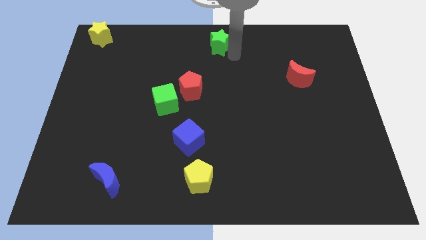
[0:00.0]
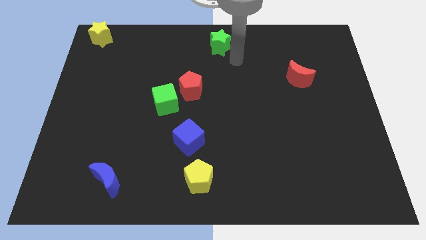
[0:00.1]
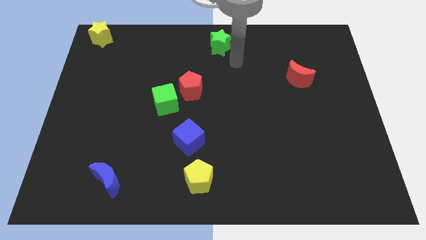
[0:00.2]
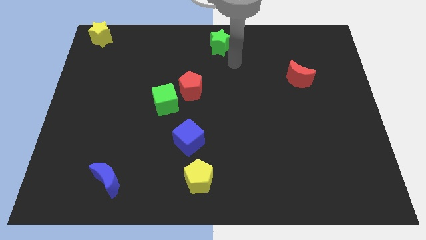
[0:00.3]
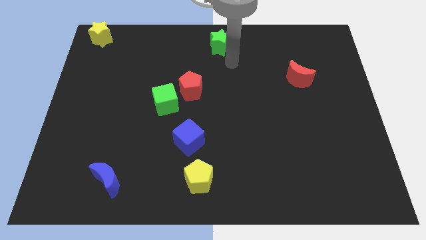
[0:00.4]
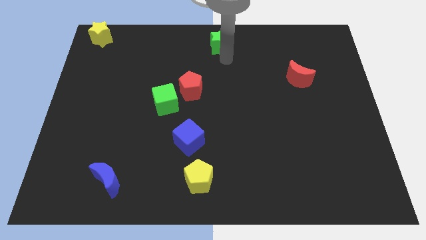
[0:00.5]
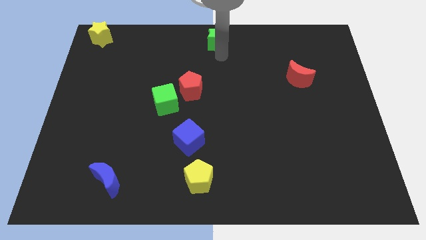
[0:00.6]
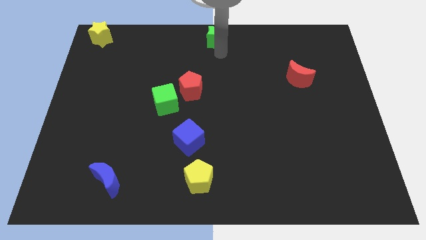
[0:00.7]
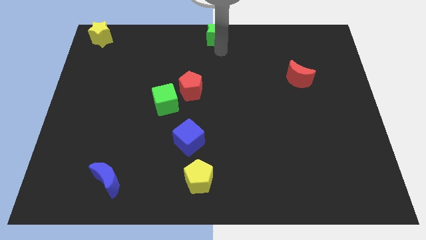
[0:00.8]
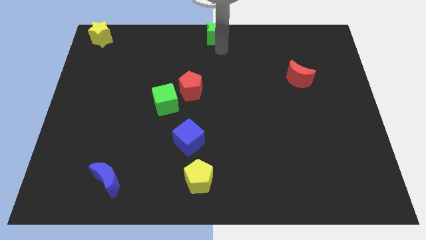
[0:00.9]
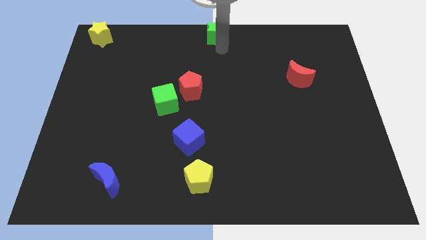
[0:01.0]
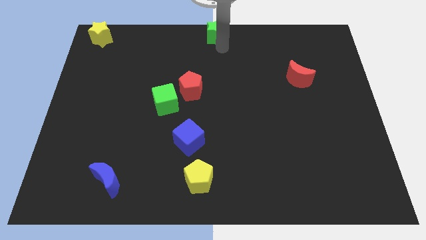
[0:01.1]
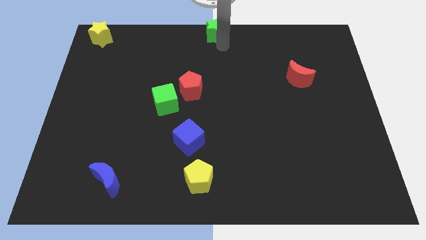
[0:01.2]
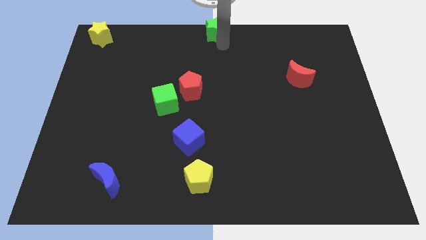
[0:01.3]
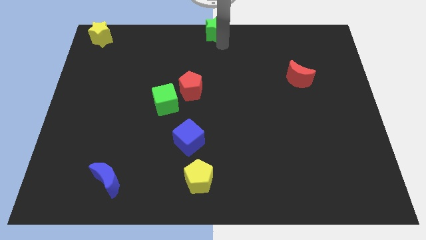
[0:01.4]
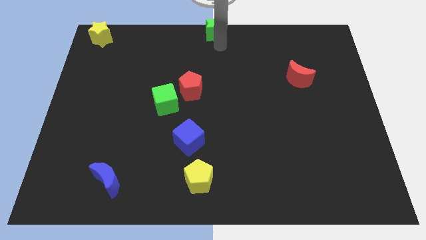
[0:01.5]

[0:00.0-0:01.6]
place green star to the top center

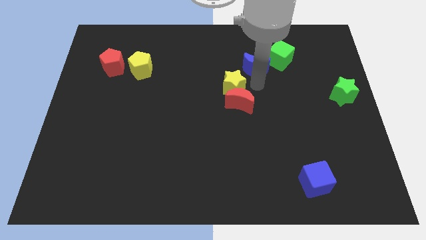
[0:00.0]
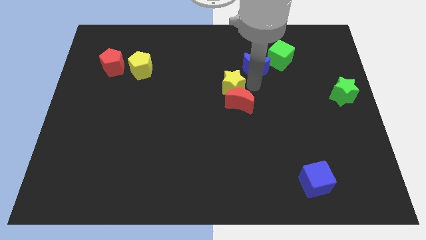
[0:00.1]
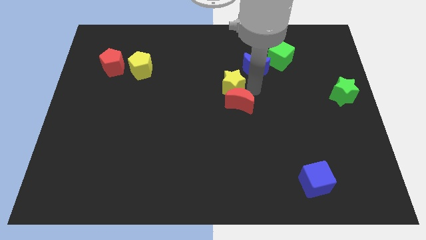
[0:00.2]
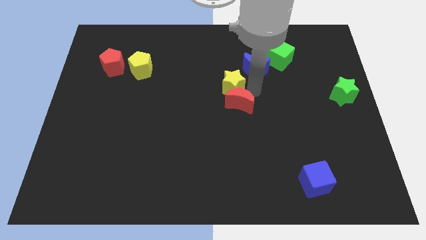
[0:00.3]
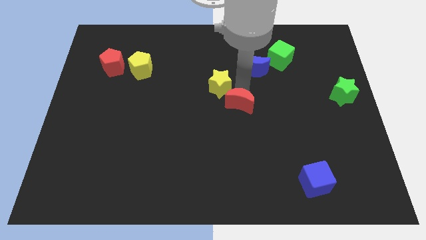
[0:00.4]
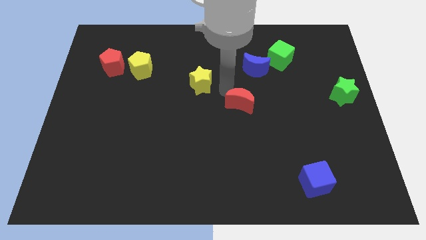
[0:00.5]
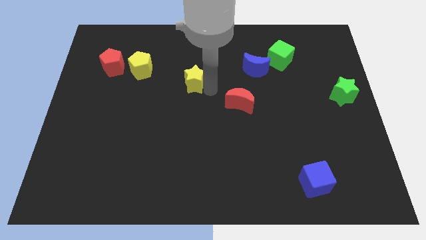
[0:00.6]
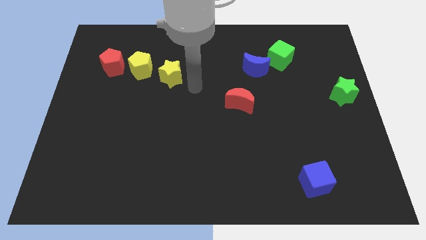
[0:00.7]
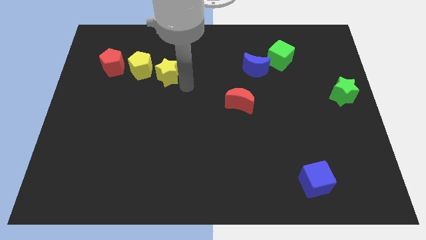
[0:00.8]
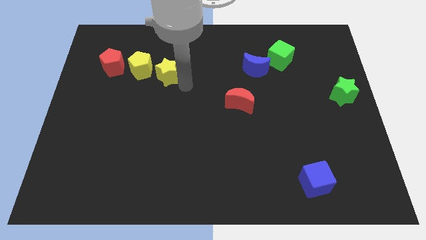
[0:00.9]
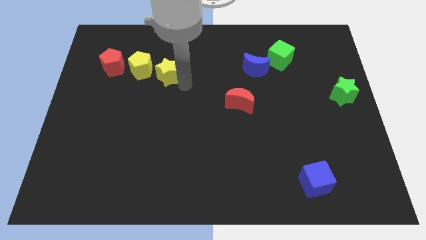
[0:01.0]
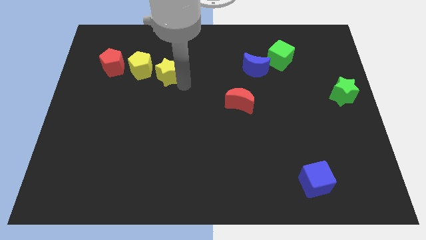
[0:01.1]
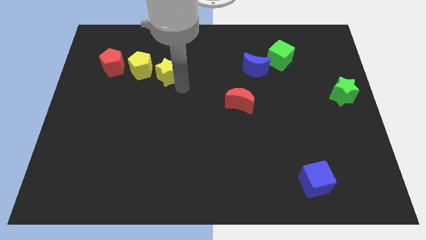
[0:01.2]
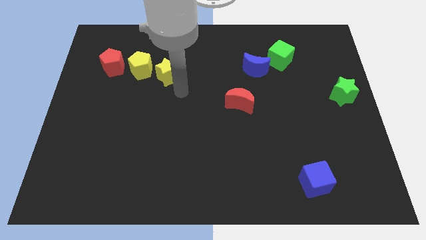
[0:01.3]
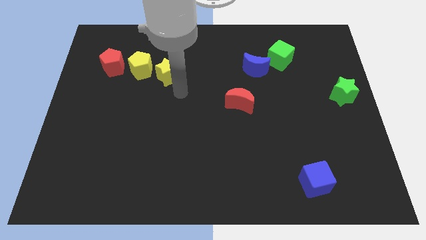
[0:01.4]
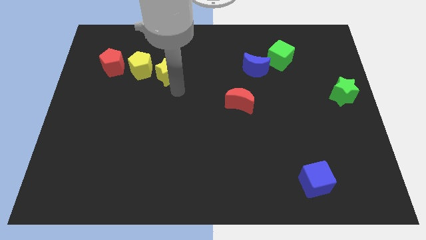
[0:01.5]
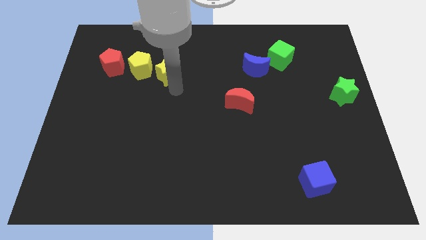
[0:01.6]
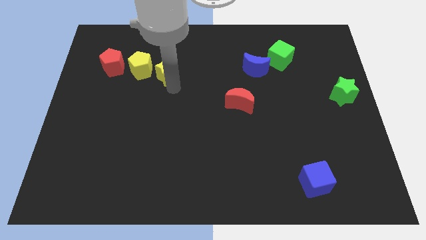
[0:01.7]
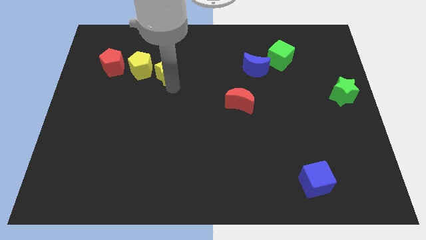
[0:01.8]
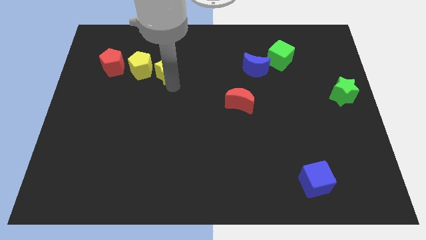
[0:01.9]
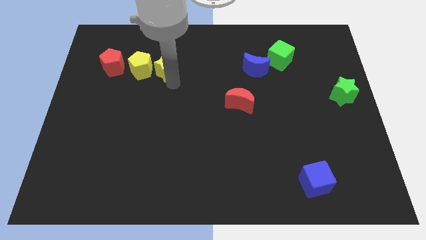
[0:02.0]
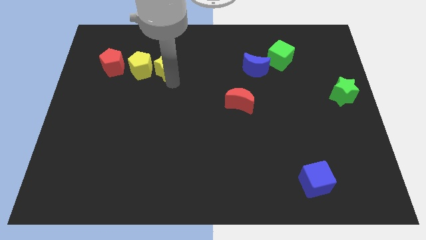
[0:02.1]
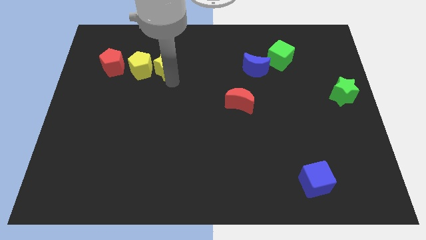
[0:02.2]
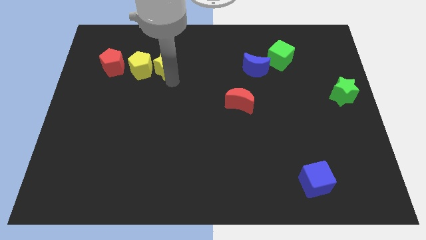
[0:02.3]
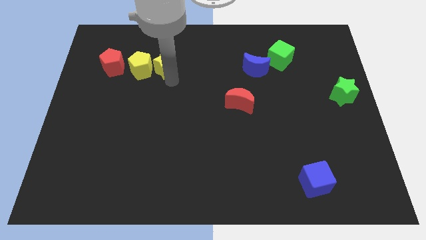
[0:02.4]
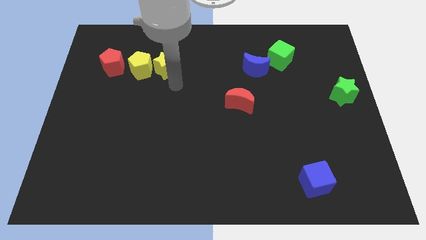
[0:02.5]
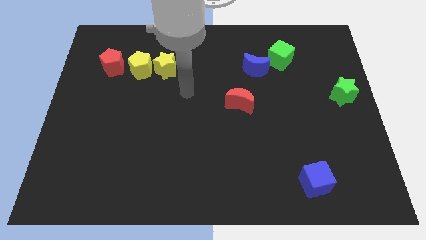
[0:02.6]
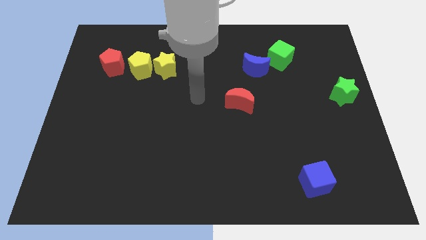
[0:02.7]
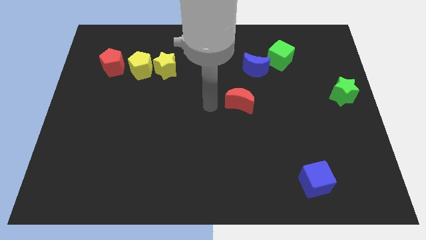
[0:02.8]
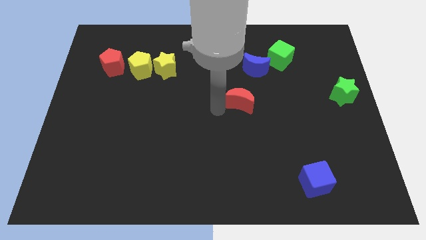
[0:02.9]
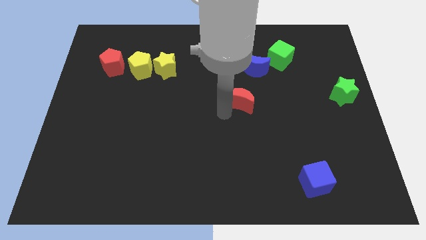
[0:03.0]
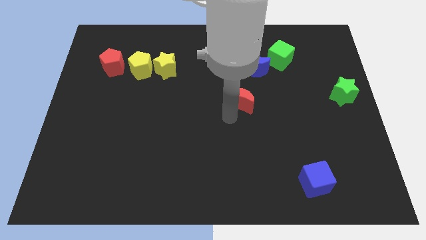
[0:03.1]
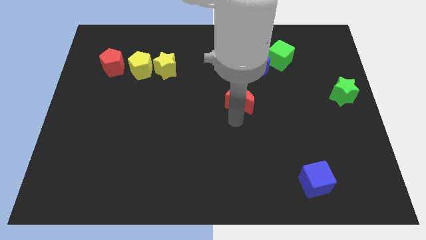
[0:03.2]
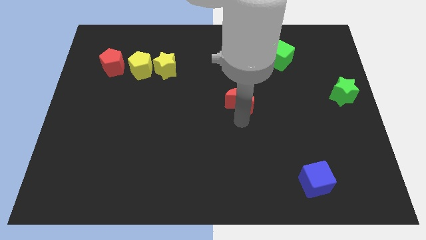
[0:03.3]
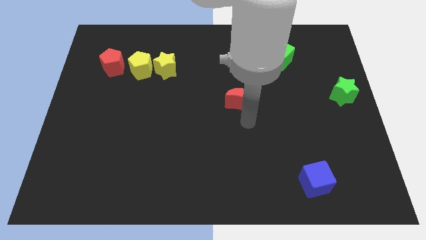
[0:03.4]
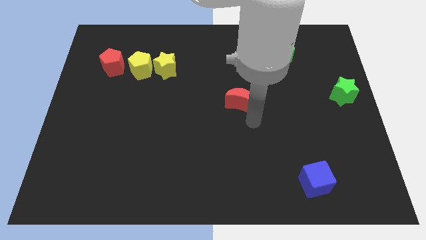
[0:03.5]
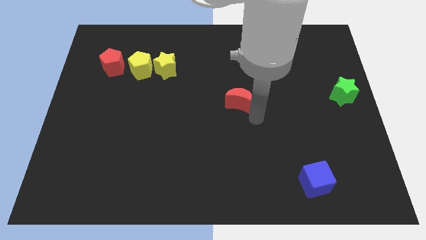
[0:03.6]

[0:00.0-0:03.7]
place the yellow star to the right of the yellow pentagon

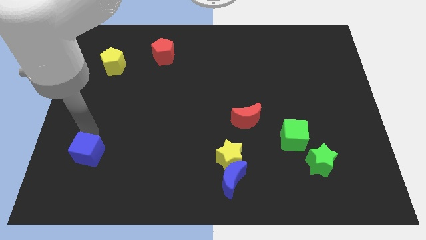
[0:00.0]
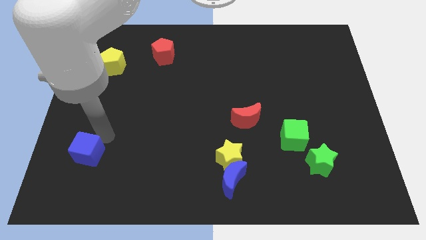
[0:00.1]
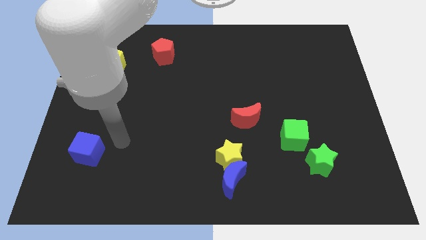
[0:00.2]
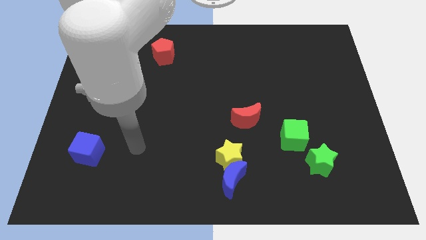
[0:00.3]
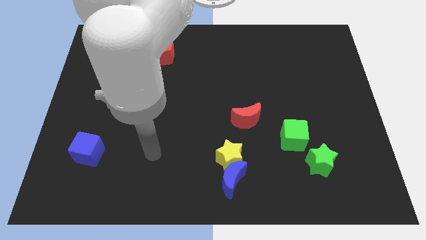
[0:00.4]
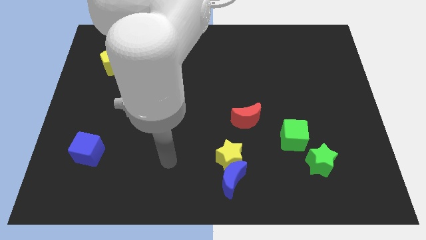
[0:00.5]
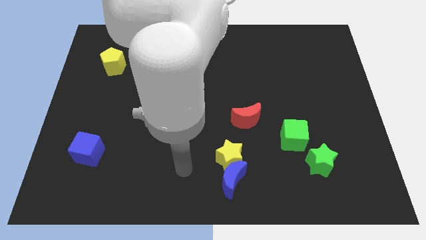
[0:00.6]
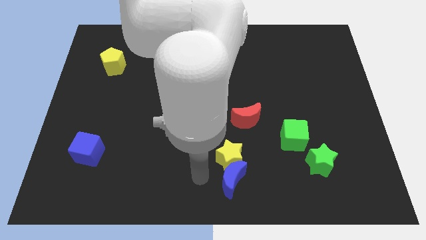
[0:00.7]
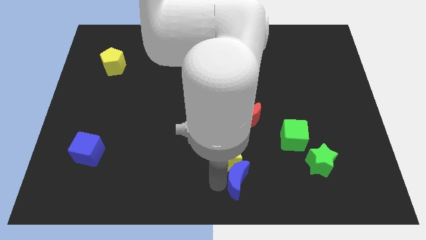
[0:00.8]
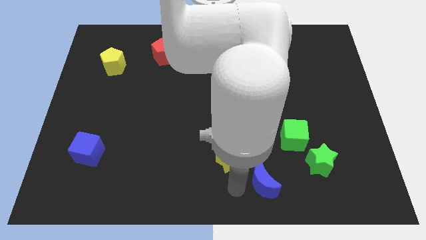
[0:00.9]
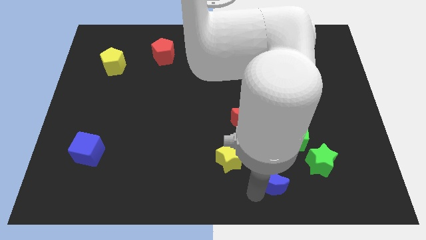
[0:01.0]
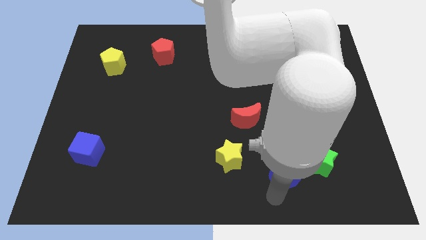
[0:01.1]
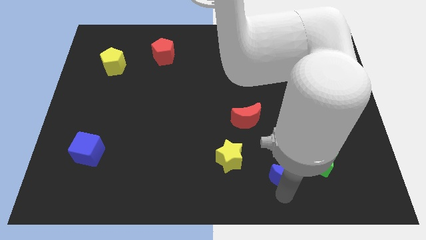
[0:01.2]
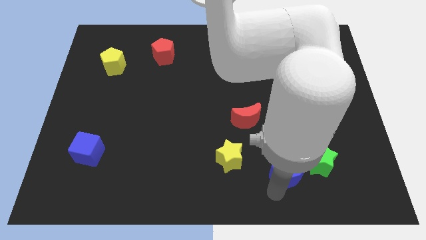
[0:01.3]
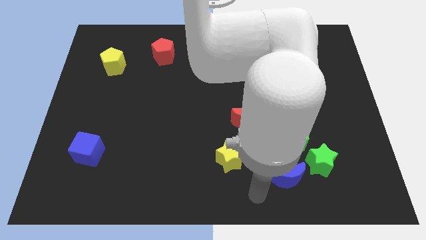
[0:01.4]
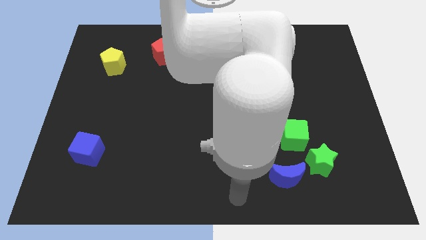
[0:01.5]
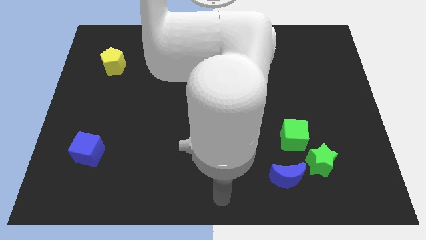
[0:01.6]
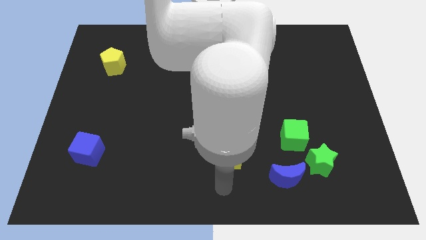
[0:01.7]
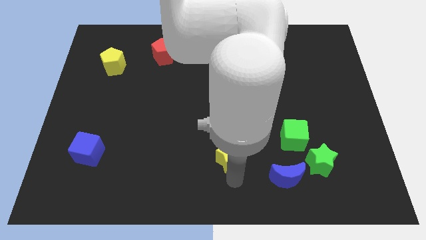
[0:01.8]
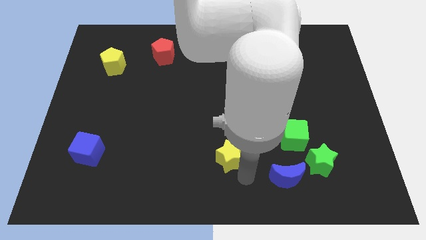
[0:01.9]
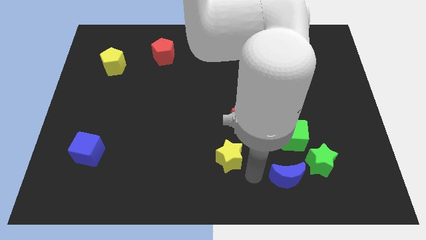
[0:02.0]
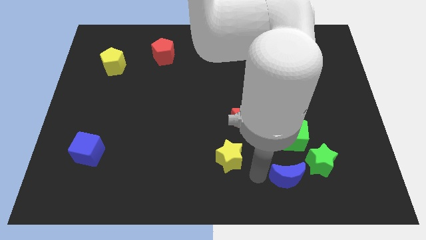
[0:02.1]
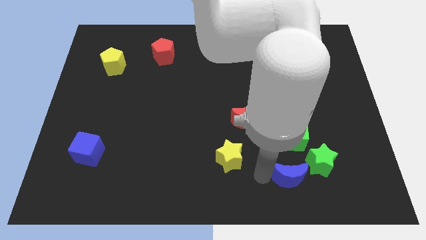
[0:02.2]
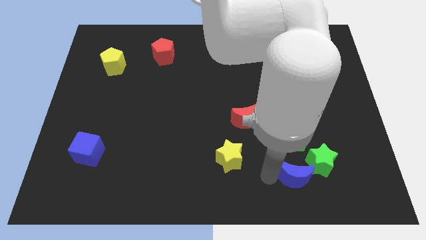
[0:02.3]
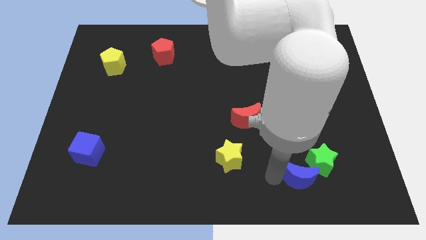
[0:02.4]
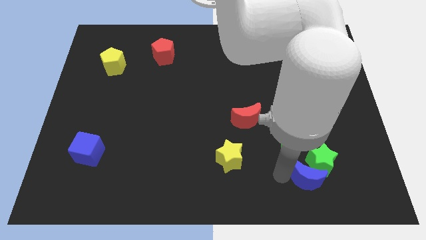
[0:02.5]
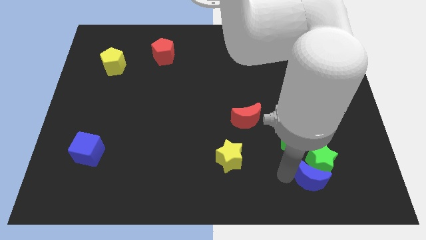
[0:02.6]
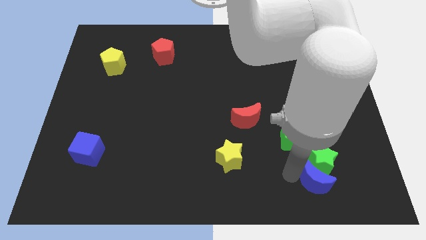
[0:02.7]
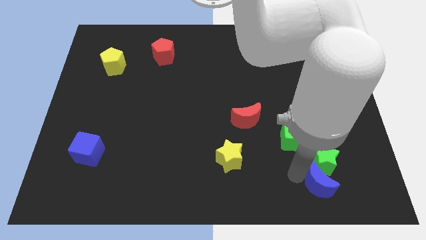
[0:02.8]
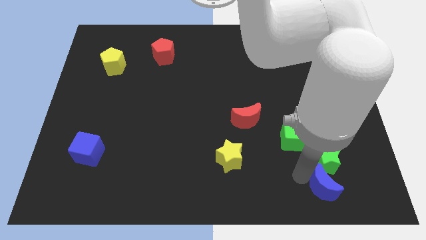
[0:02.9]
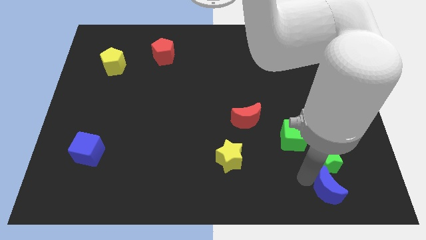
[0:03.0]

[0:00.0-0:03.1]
push the blue moon into the green star

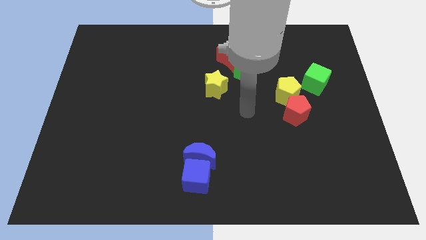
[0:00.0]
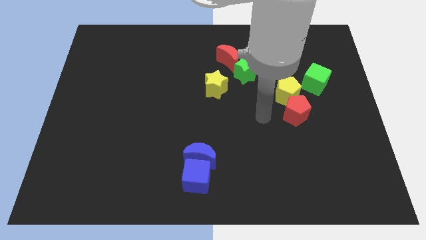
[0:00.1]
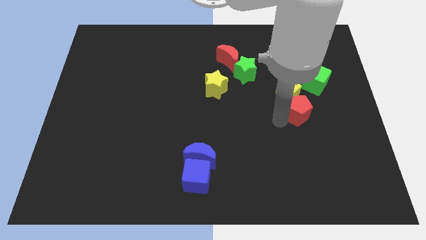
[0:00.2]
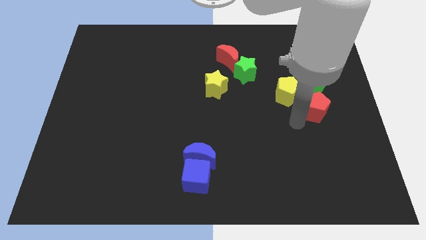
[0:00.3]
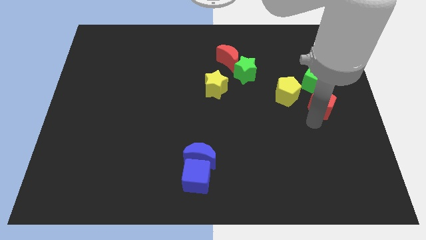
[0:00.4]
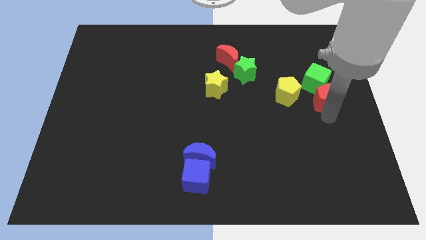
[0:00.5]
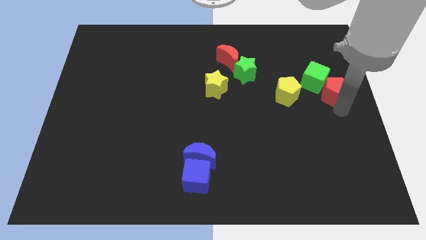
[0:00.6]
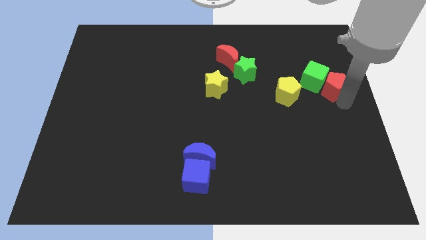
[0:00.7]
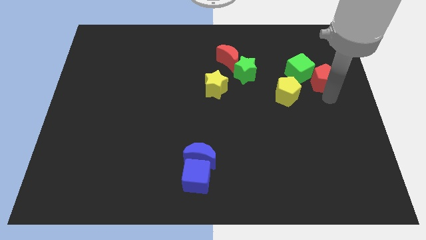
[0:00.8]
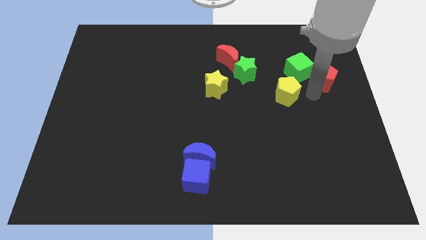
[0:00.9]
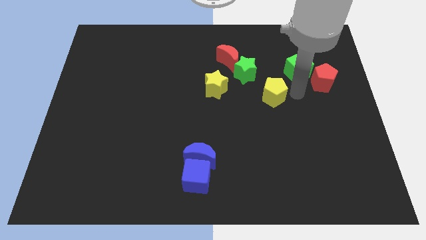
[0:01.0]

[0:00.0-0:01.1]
move the red pentagon to the right side of green square
